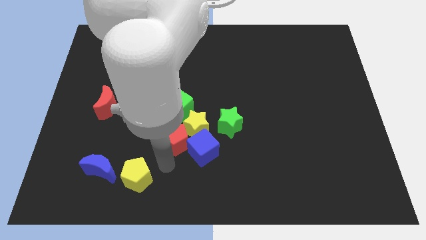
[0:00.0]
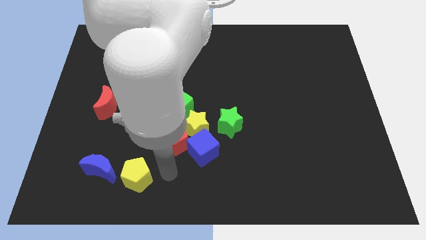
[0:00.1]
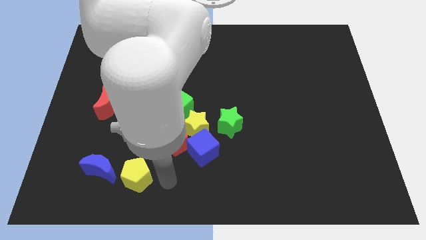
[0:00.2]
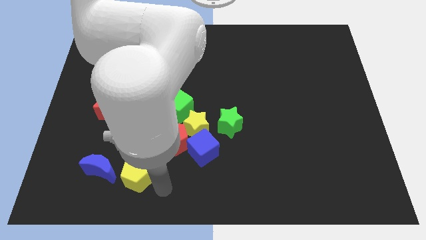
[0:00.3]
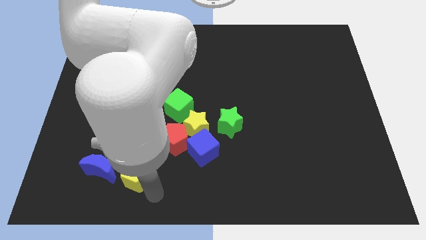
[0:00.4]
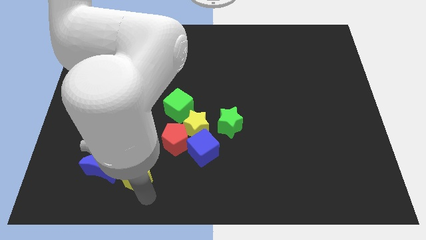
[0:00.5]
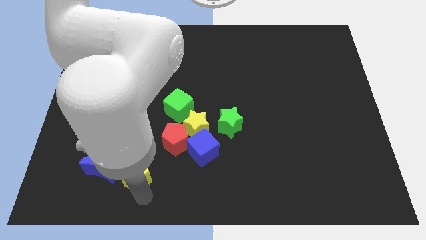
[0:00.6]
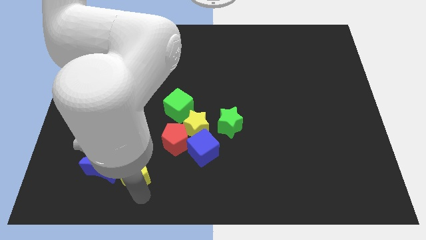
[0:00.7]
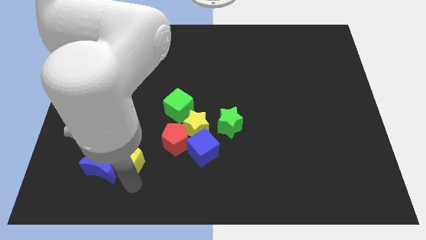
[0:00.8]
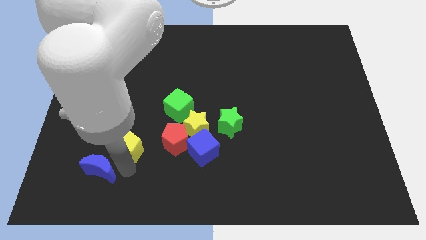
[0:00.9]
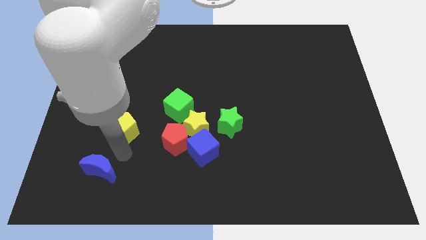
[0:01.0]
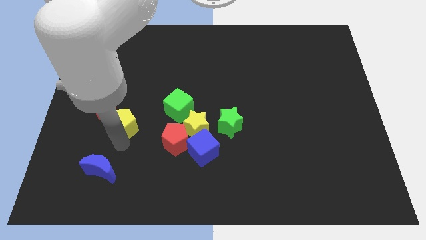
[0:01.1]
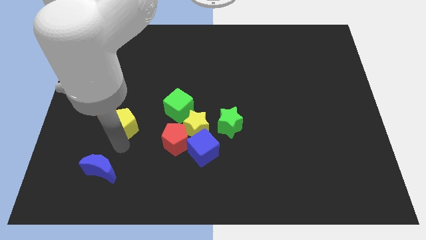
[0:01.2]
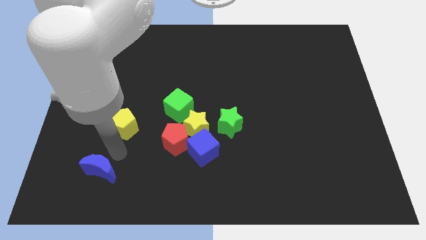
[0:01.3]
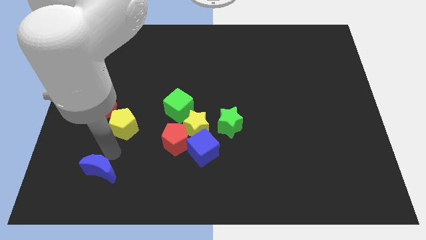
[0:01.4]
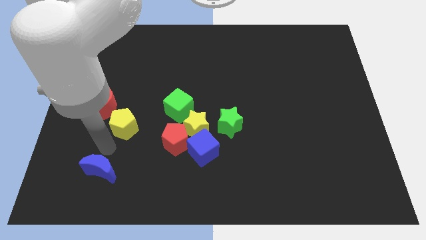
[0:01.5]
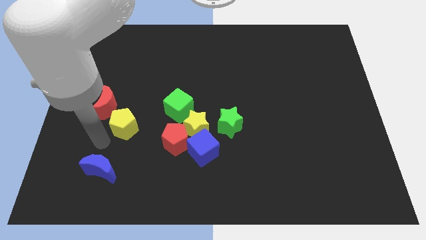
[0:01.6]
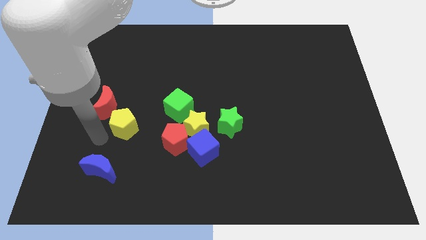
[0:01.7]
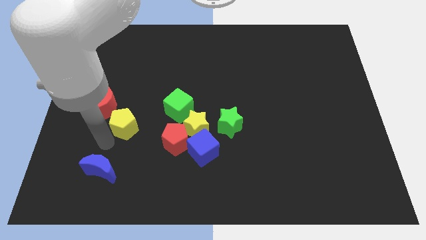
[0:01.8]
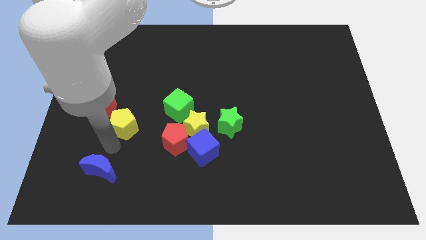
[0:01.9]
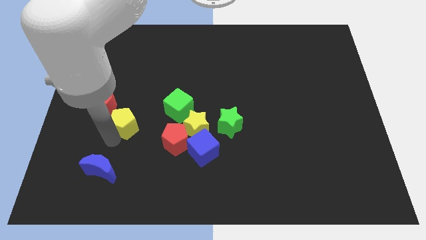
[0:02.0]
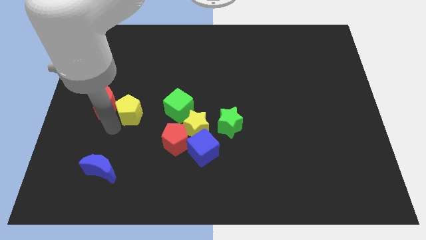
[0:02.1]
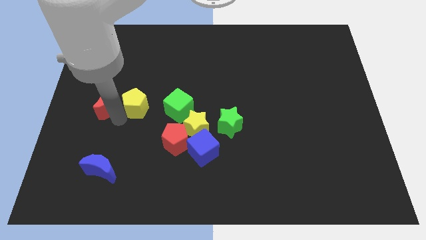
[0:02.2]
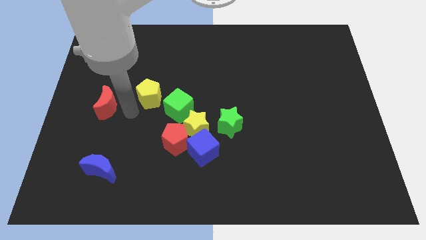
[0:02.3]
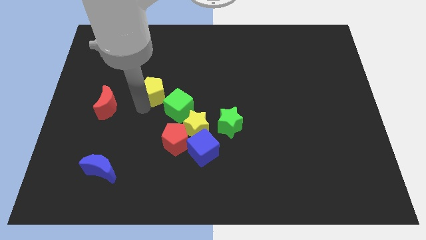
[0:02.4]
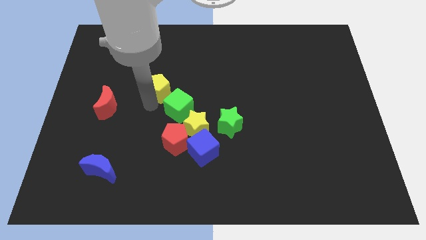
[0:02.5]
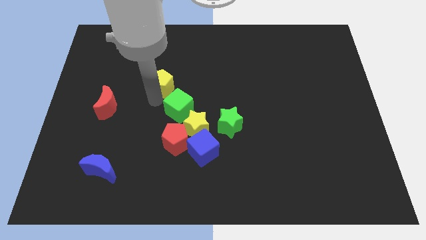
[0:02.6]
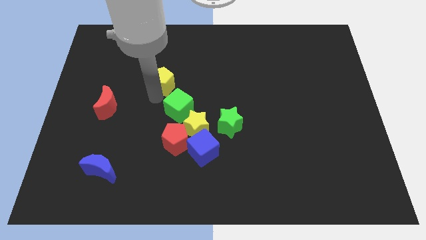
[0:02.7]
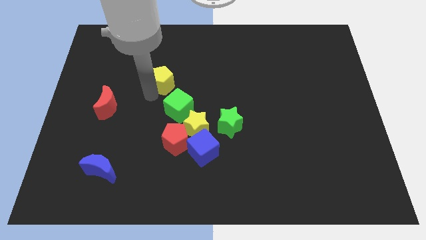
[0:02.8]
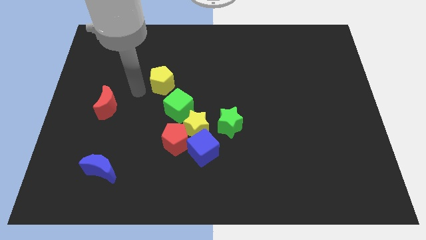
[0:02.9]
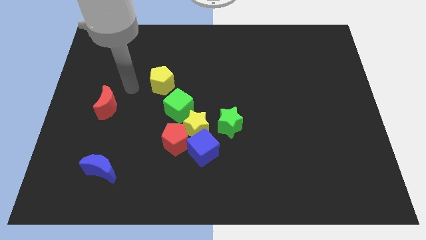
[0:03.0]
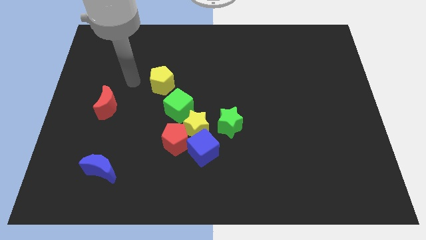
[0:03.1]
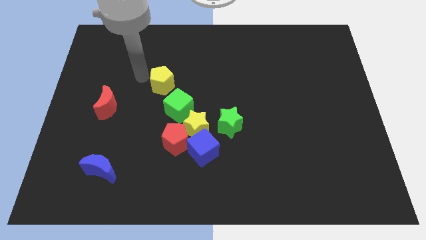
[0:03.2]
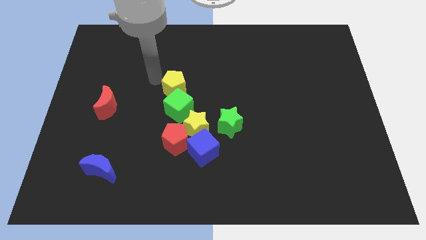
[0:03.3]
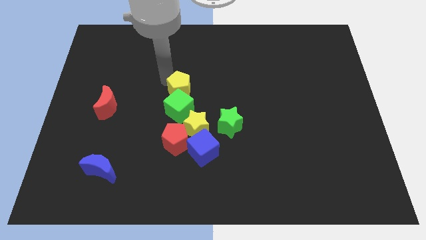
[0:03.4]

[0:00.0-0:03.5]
place yellow pentagon above green cube

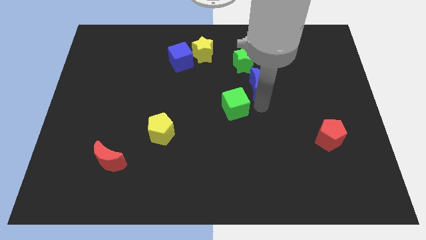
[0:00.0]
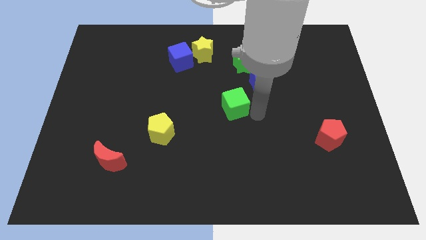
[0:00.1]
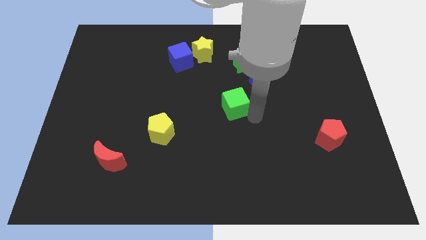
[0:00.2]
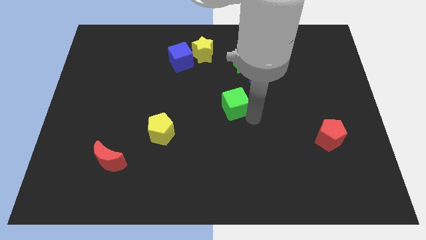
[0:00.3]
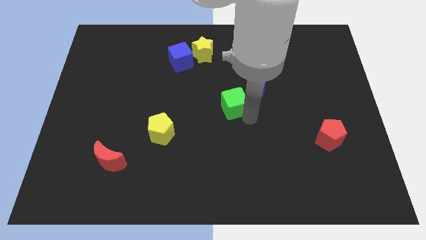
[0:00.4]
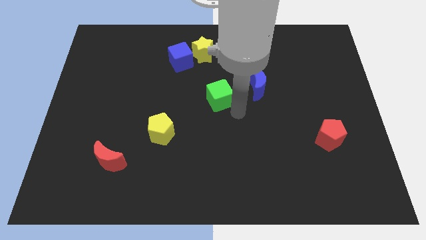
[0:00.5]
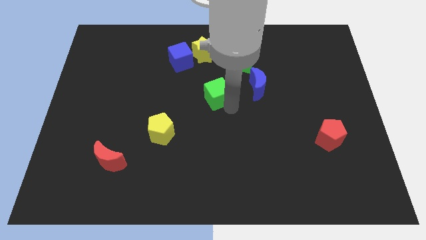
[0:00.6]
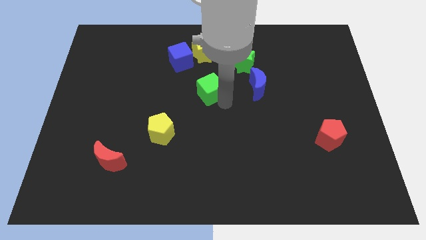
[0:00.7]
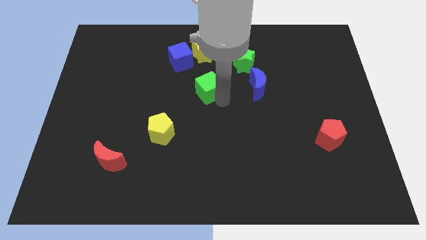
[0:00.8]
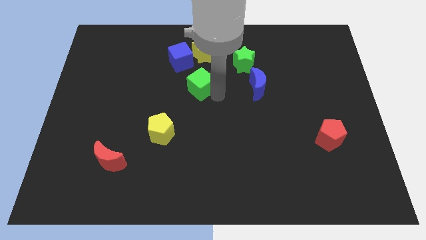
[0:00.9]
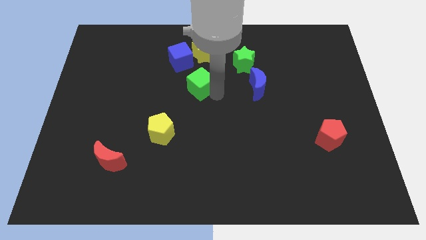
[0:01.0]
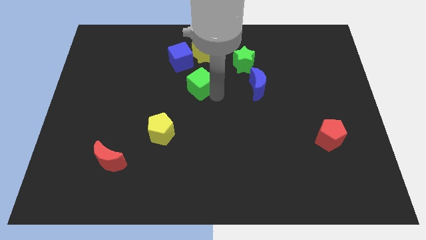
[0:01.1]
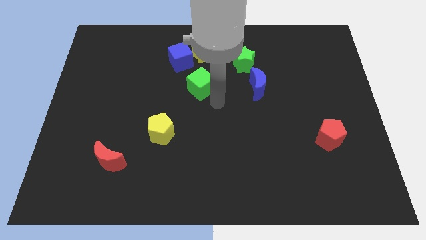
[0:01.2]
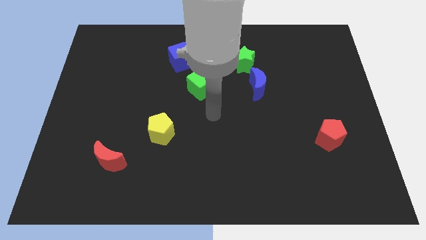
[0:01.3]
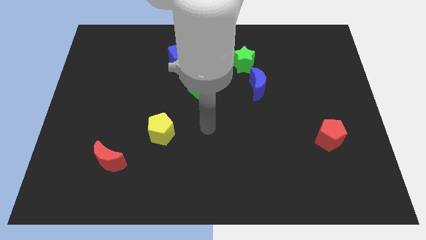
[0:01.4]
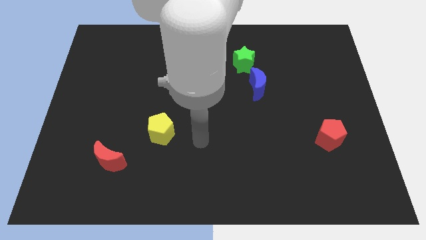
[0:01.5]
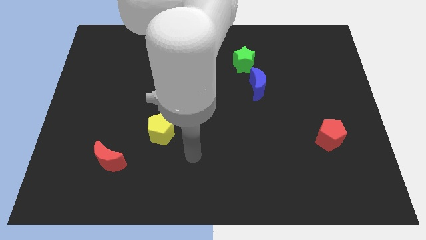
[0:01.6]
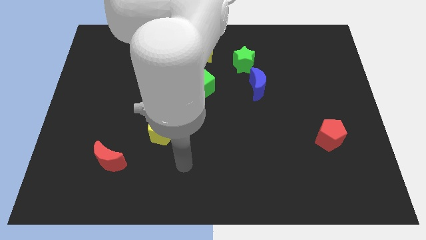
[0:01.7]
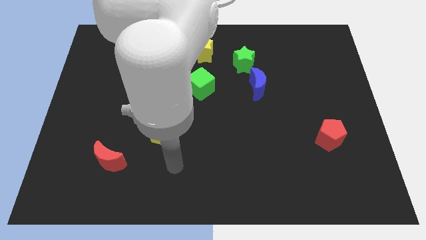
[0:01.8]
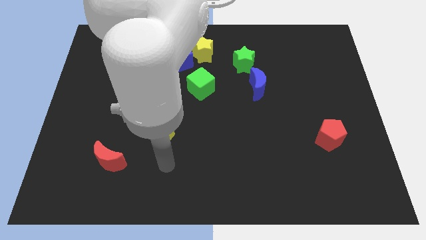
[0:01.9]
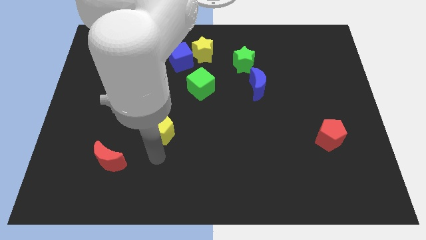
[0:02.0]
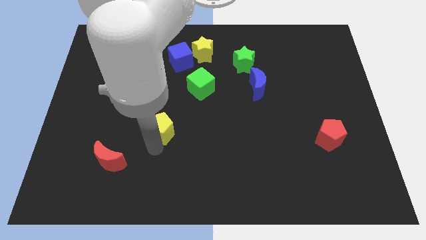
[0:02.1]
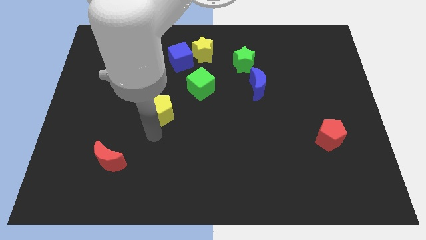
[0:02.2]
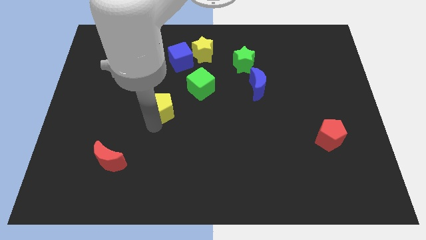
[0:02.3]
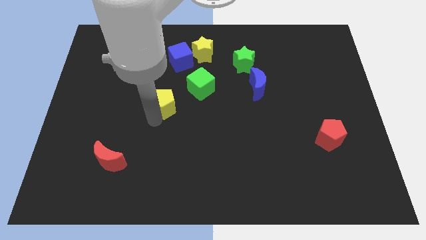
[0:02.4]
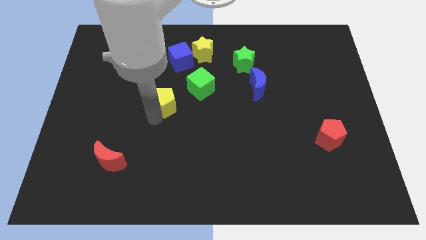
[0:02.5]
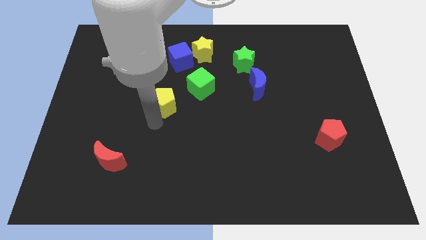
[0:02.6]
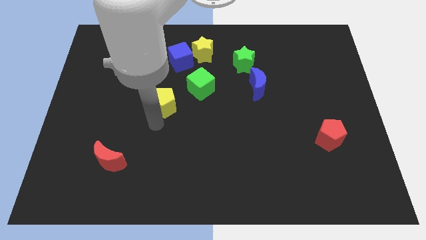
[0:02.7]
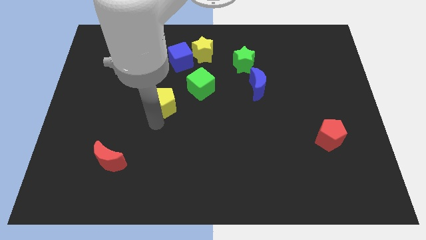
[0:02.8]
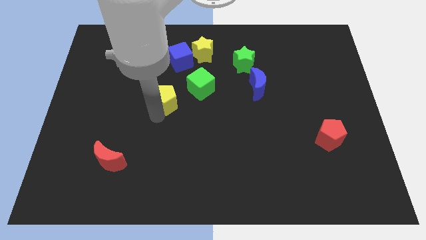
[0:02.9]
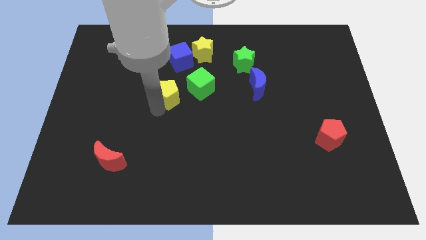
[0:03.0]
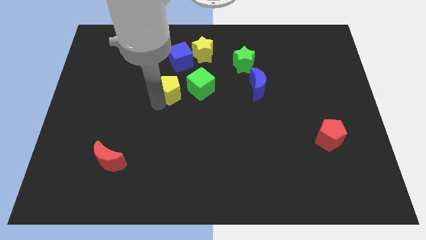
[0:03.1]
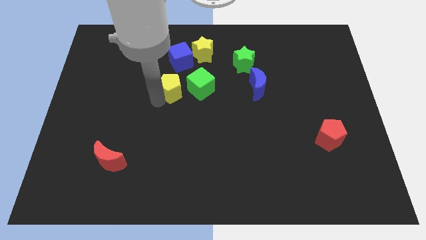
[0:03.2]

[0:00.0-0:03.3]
place the green cube and the yellow pentagon below the blue cube

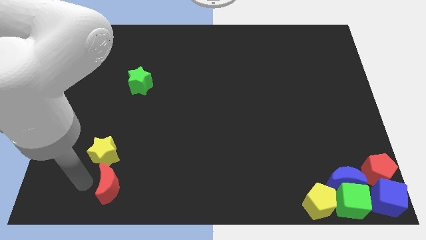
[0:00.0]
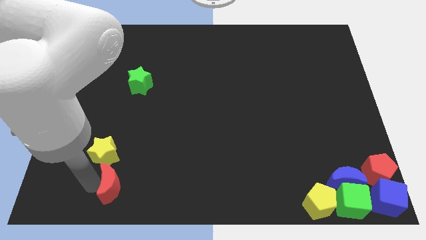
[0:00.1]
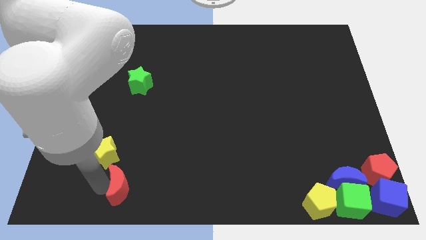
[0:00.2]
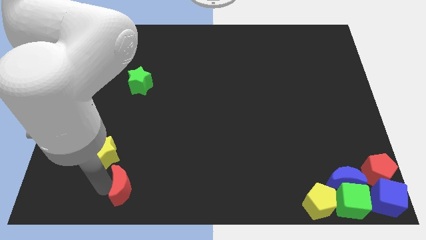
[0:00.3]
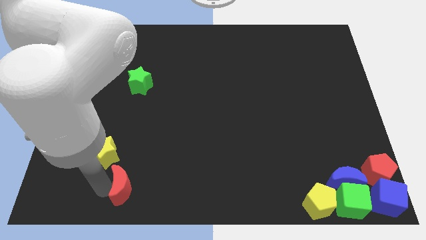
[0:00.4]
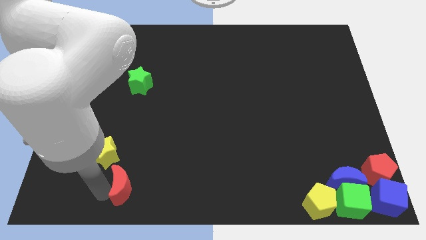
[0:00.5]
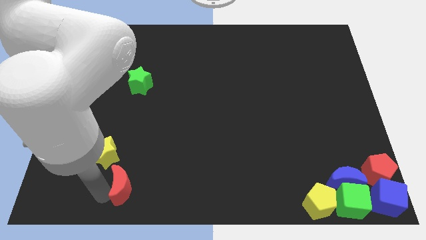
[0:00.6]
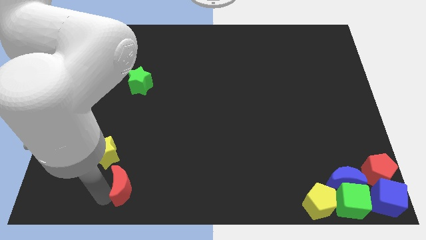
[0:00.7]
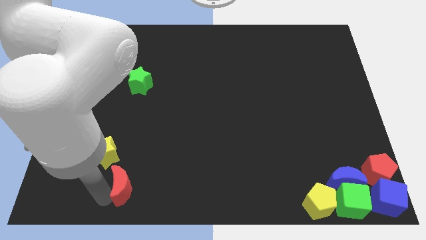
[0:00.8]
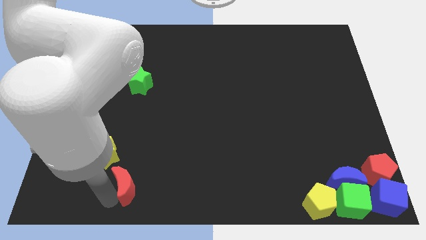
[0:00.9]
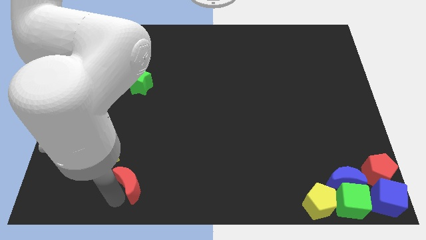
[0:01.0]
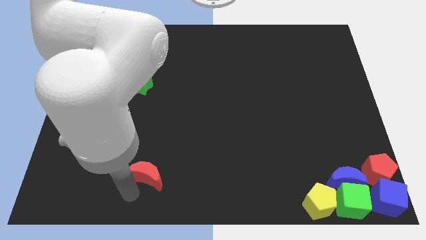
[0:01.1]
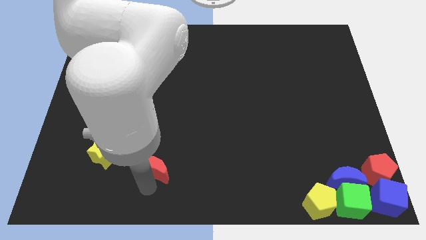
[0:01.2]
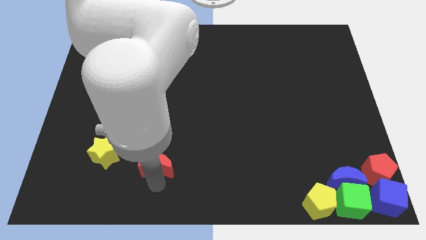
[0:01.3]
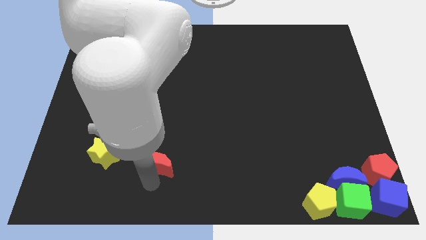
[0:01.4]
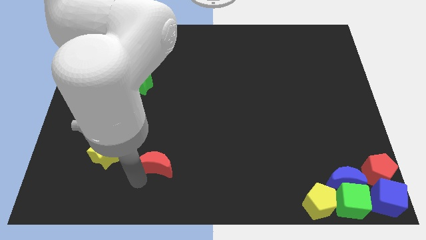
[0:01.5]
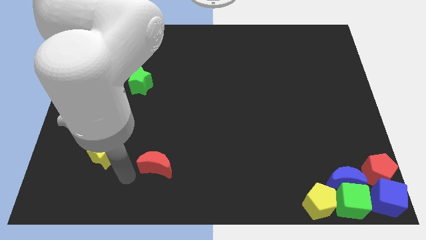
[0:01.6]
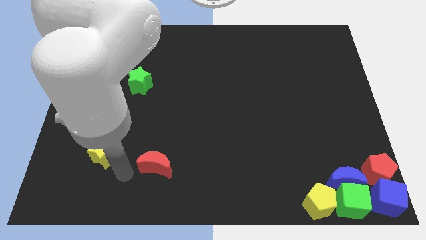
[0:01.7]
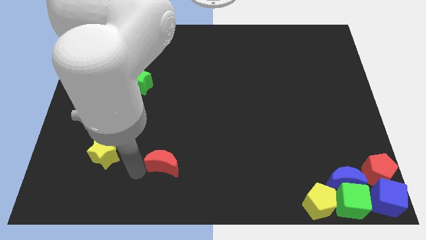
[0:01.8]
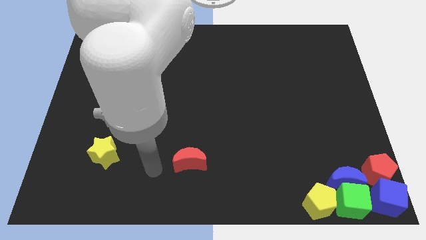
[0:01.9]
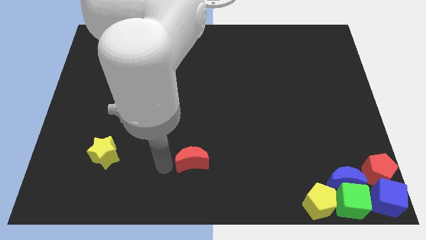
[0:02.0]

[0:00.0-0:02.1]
place the red moon right to the yellow star

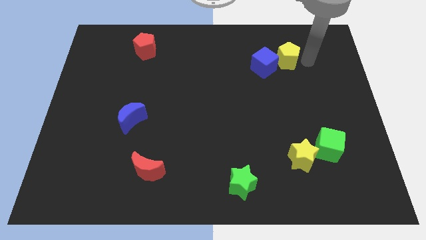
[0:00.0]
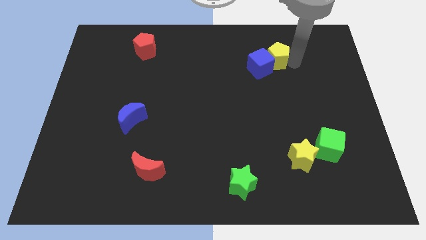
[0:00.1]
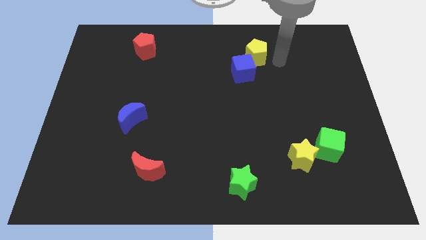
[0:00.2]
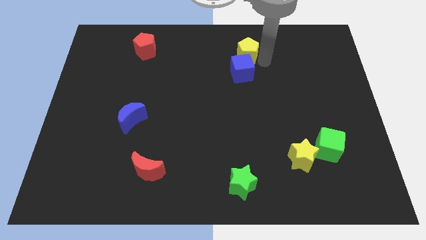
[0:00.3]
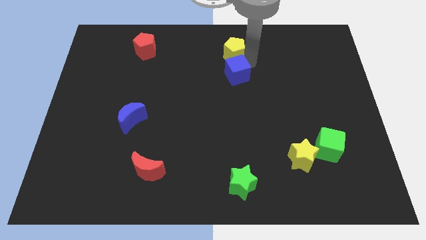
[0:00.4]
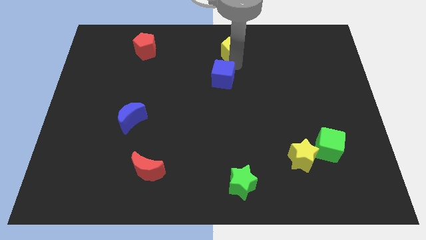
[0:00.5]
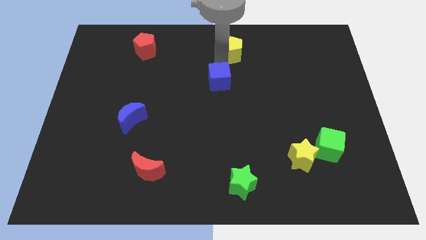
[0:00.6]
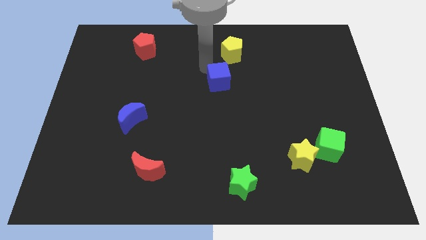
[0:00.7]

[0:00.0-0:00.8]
push the blue cube and yellow pentagon towards the left side of the board
